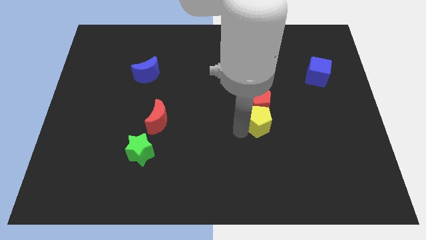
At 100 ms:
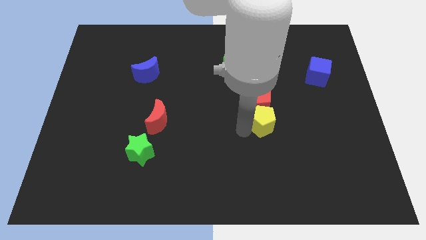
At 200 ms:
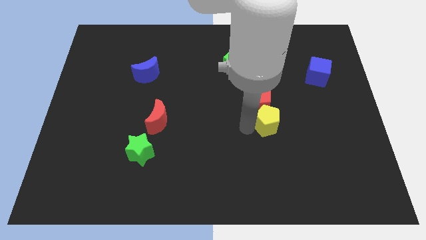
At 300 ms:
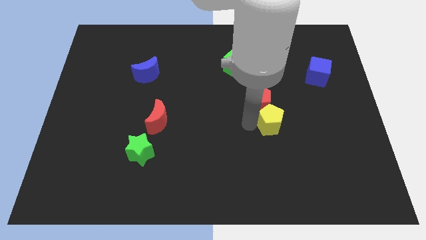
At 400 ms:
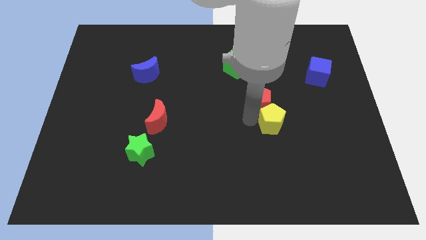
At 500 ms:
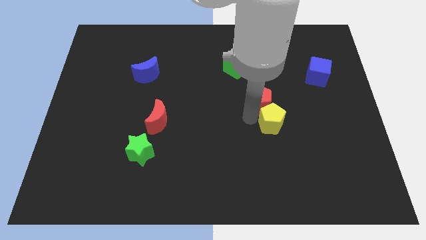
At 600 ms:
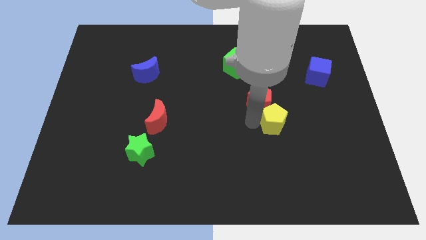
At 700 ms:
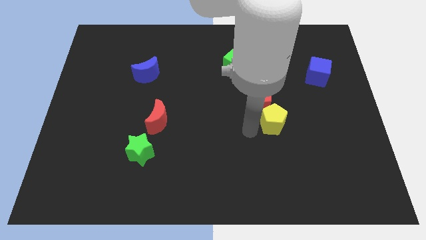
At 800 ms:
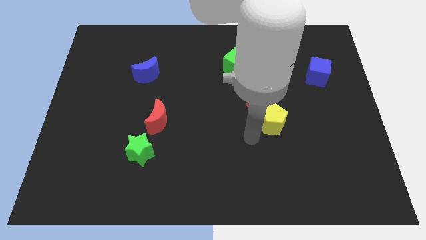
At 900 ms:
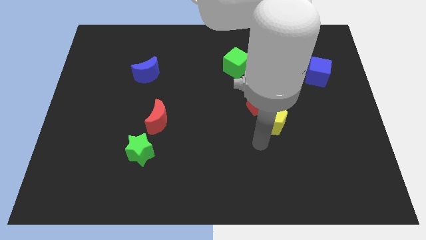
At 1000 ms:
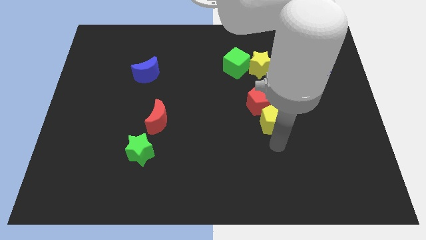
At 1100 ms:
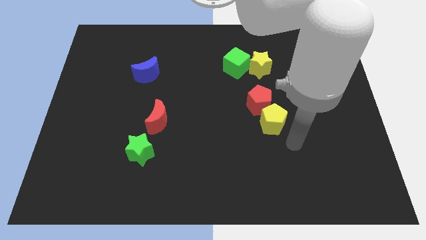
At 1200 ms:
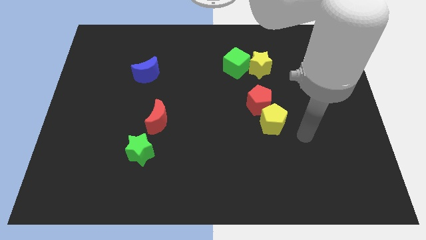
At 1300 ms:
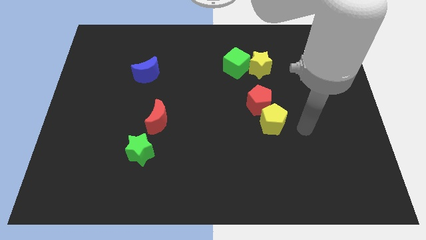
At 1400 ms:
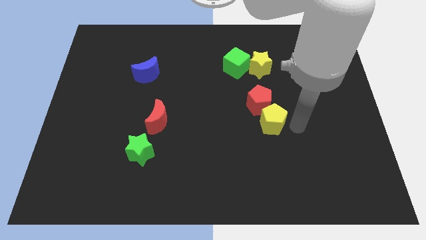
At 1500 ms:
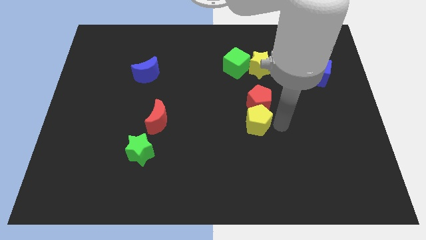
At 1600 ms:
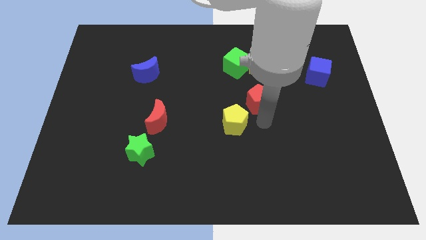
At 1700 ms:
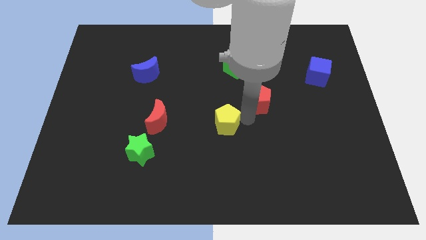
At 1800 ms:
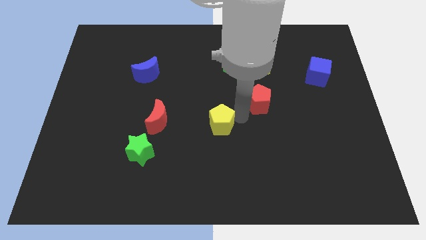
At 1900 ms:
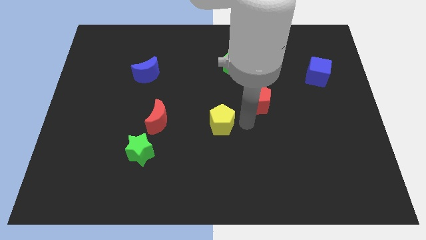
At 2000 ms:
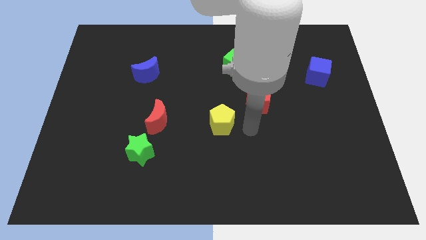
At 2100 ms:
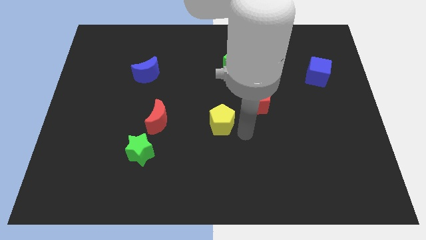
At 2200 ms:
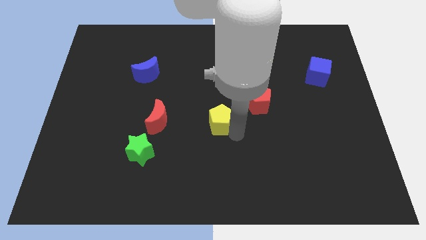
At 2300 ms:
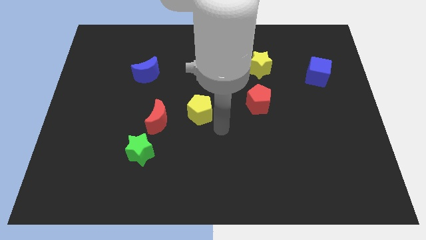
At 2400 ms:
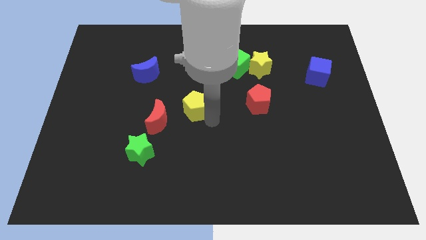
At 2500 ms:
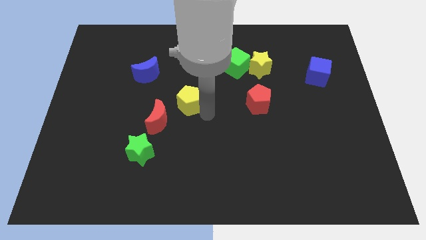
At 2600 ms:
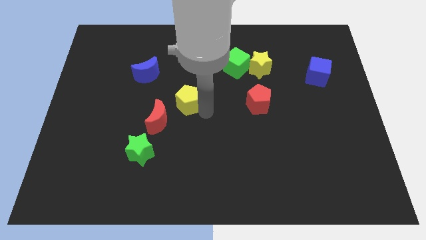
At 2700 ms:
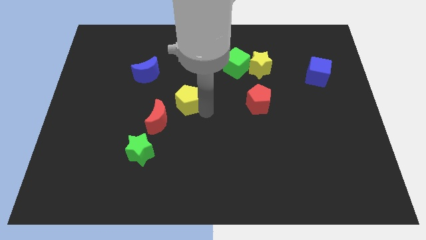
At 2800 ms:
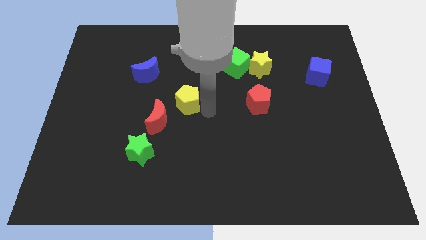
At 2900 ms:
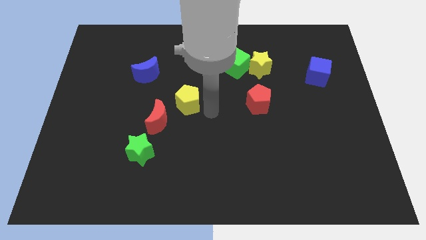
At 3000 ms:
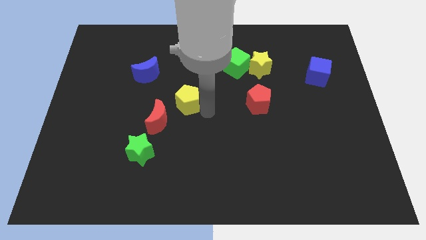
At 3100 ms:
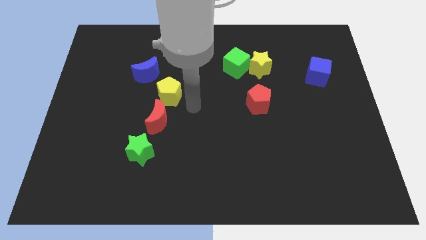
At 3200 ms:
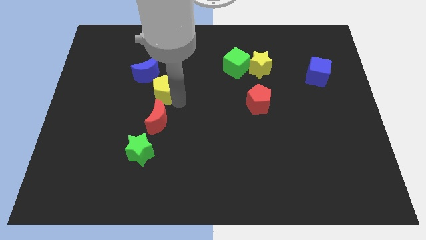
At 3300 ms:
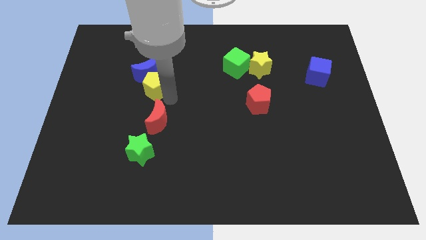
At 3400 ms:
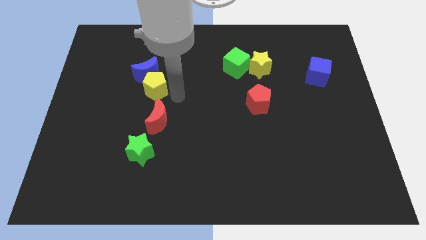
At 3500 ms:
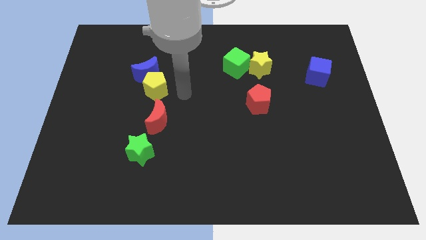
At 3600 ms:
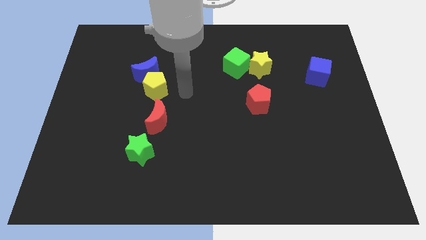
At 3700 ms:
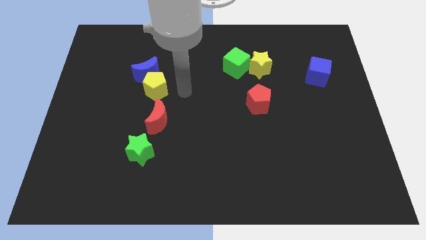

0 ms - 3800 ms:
move the yellow pentagon in between the blue crescent and red crescent

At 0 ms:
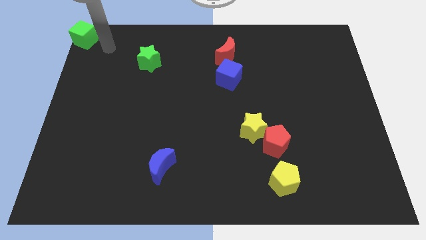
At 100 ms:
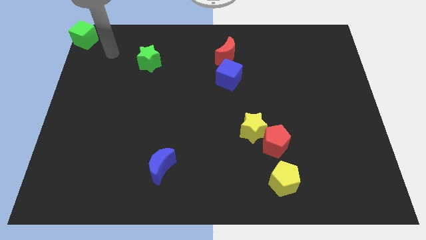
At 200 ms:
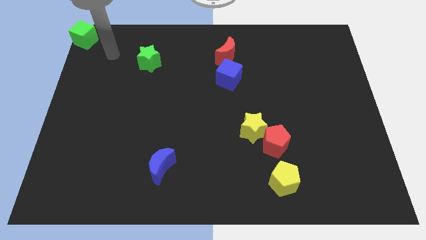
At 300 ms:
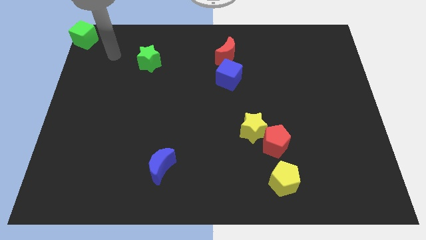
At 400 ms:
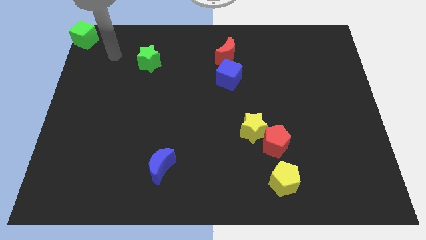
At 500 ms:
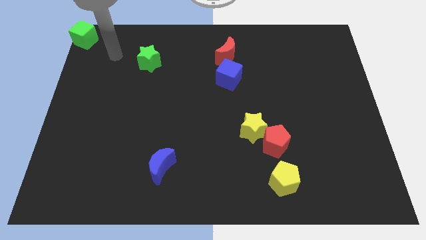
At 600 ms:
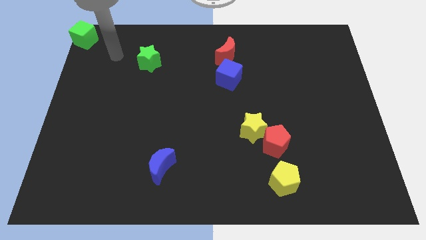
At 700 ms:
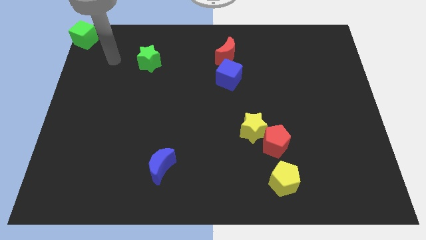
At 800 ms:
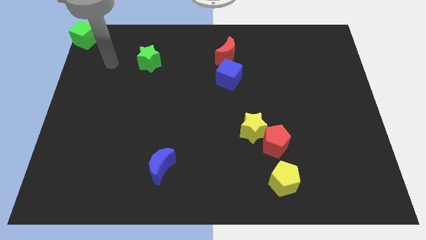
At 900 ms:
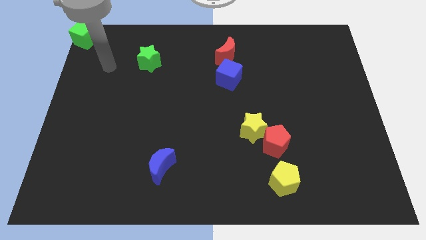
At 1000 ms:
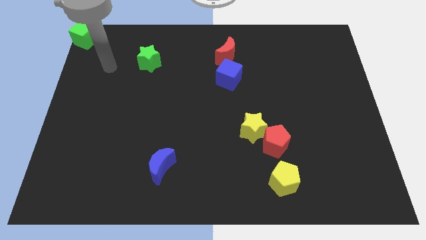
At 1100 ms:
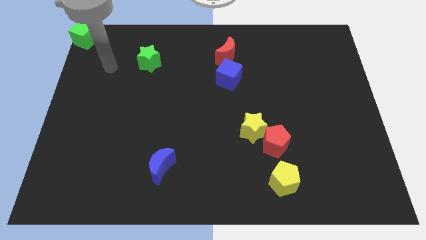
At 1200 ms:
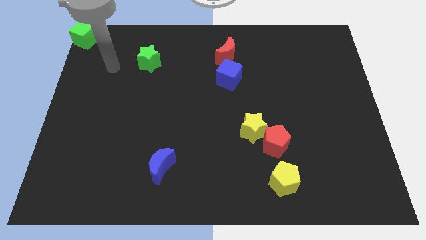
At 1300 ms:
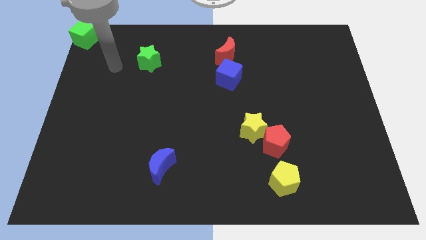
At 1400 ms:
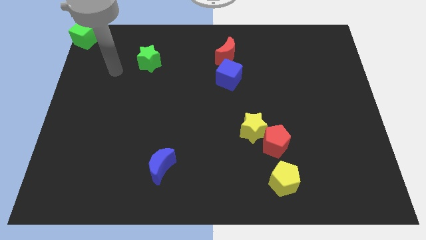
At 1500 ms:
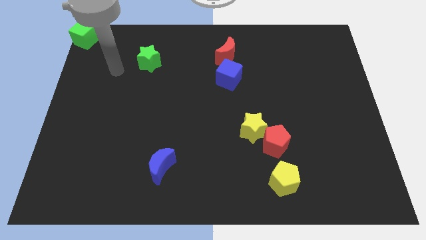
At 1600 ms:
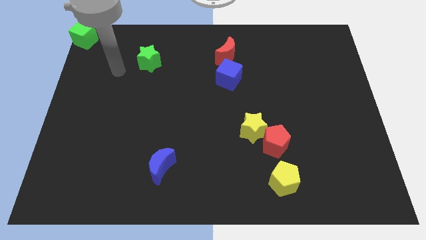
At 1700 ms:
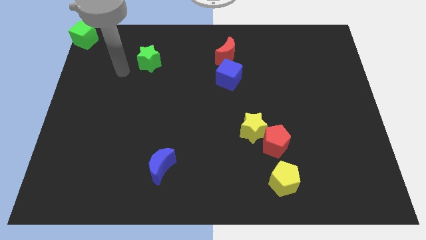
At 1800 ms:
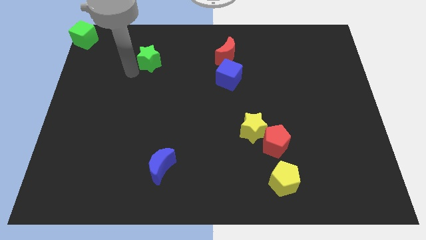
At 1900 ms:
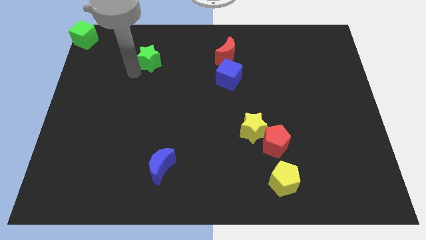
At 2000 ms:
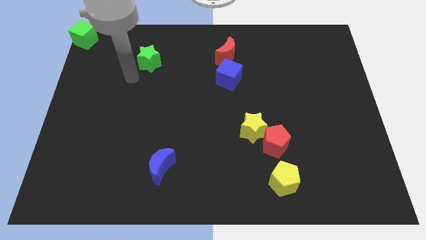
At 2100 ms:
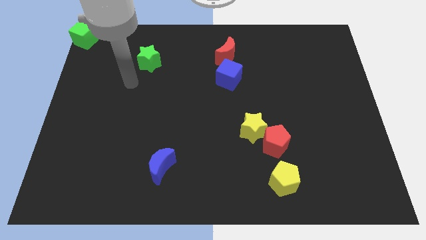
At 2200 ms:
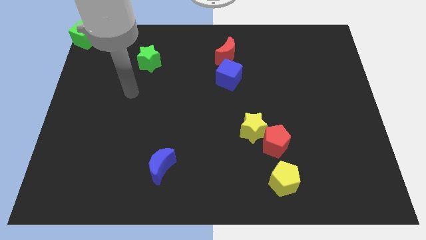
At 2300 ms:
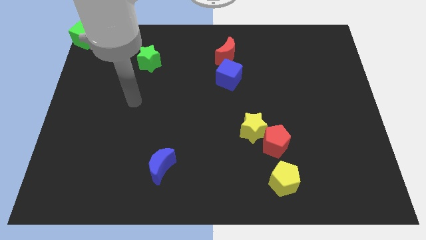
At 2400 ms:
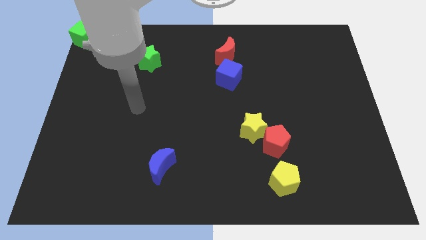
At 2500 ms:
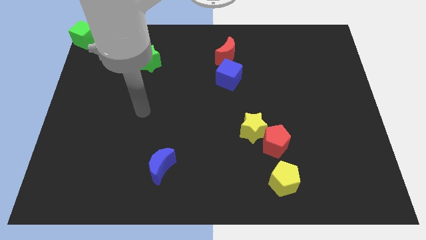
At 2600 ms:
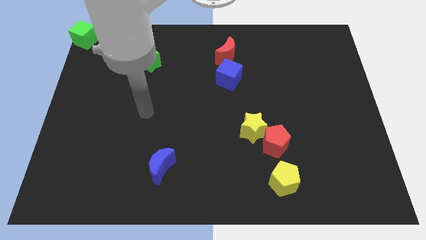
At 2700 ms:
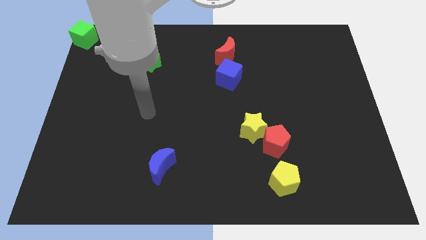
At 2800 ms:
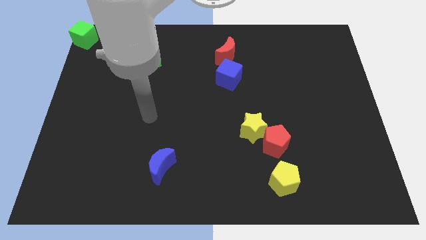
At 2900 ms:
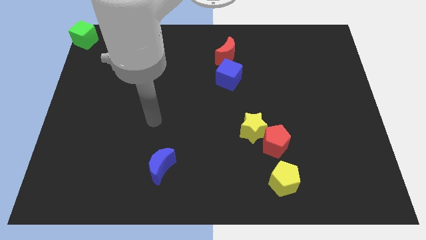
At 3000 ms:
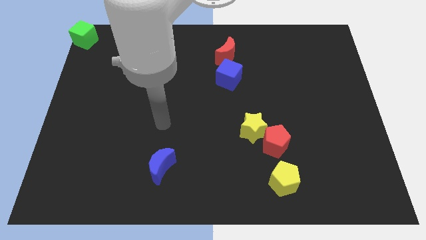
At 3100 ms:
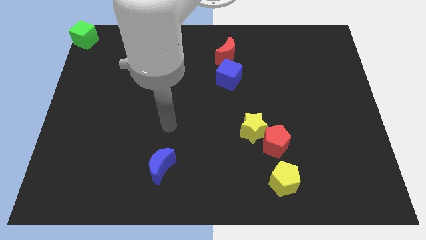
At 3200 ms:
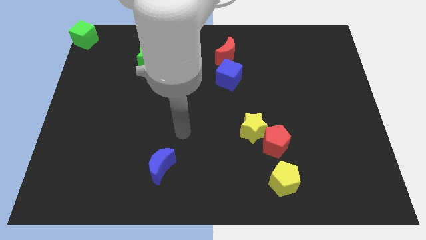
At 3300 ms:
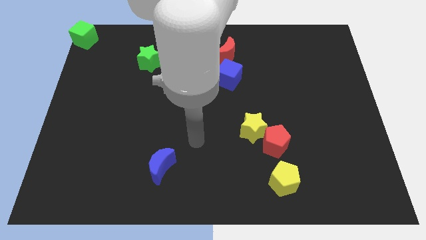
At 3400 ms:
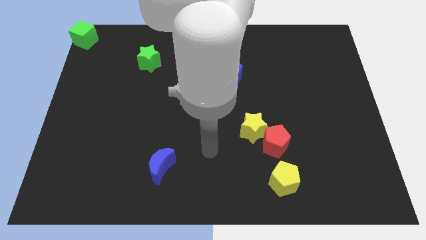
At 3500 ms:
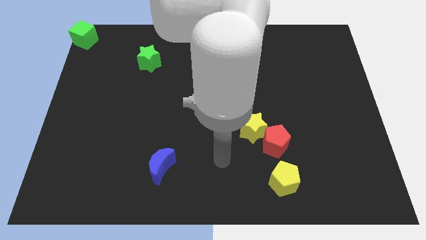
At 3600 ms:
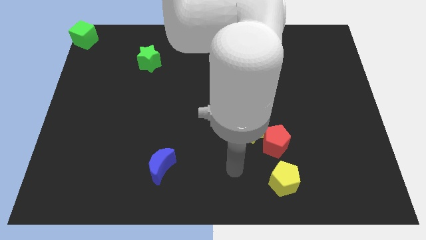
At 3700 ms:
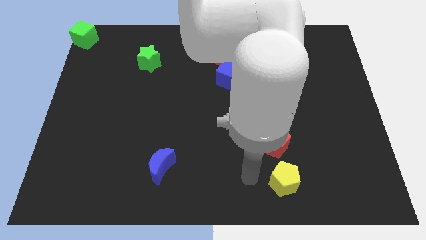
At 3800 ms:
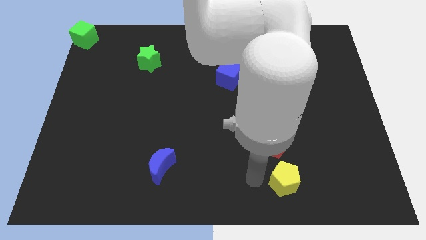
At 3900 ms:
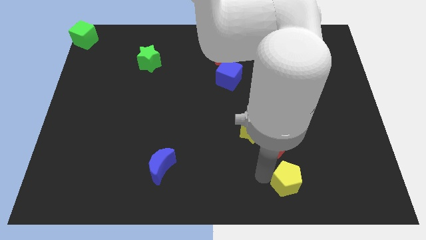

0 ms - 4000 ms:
move your arm to the left side of the yellow pentagon

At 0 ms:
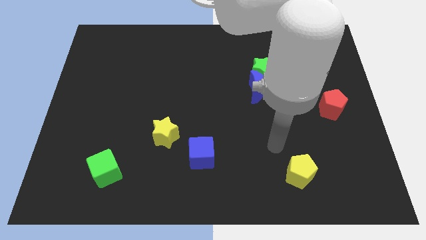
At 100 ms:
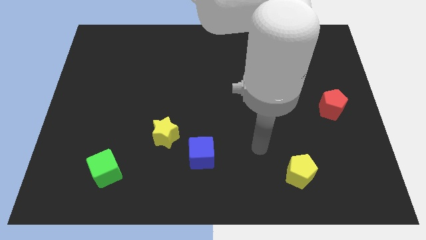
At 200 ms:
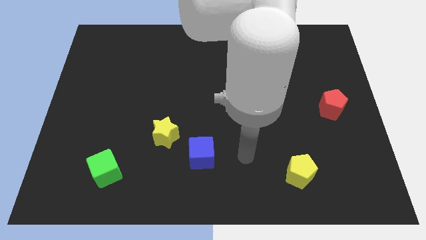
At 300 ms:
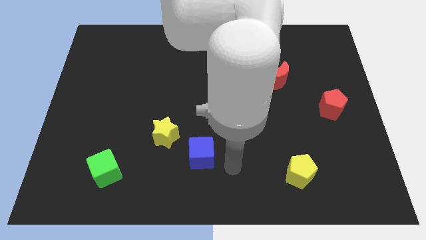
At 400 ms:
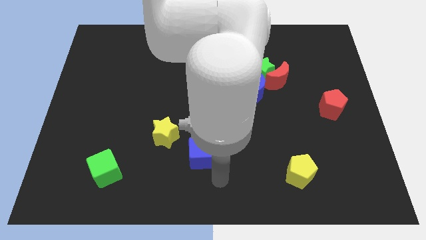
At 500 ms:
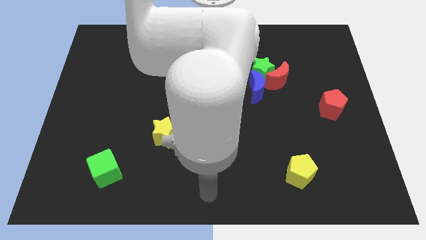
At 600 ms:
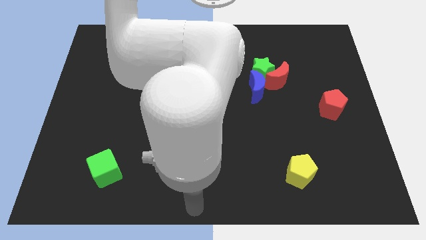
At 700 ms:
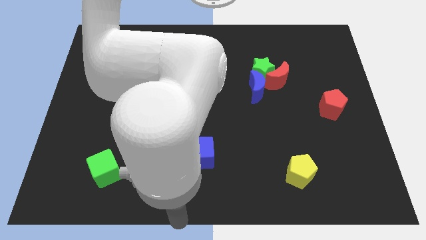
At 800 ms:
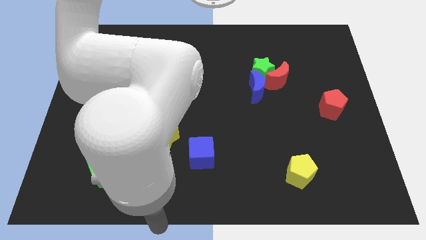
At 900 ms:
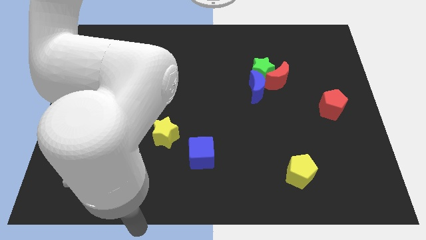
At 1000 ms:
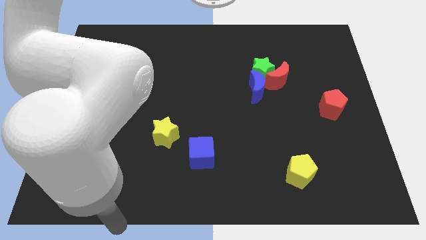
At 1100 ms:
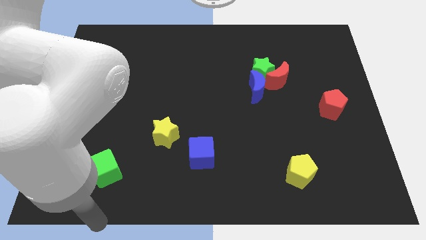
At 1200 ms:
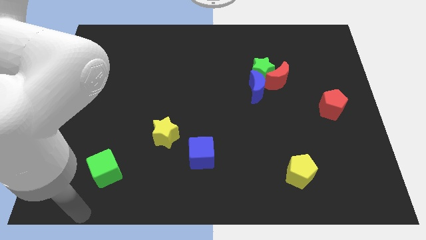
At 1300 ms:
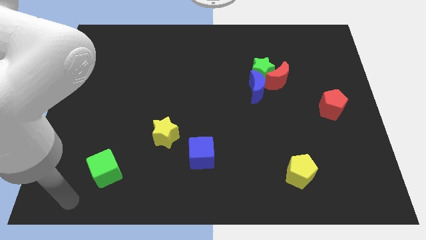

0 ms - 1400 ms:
move the arm bottom left to the green cube
